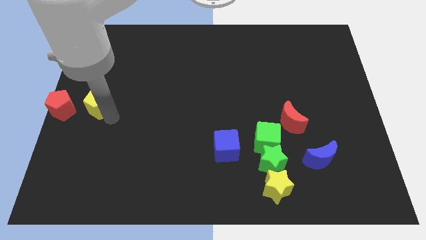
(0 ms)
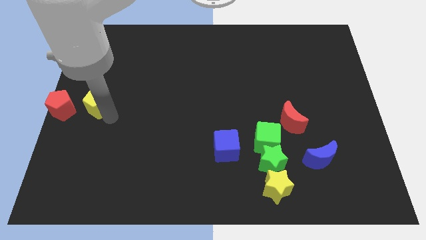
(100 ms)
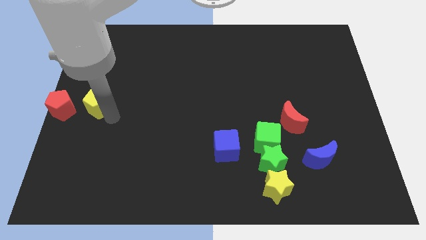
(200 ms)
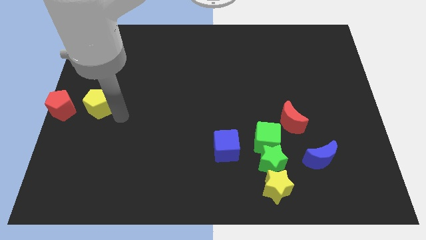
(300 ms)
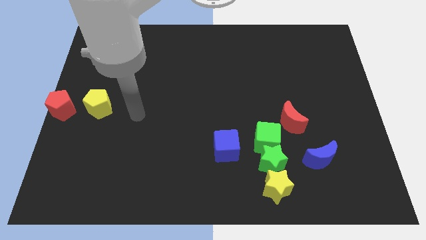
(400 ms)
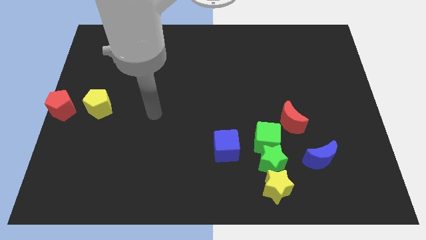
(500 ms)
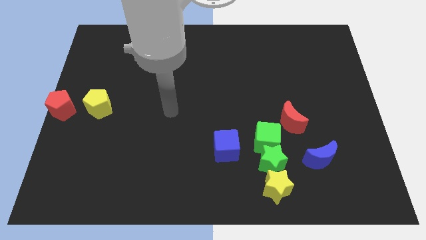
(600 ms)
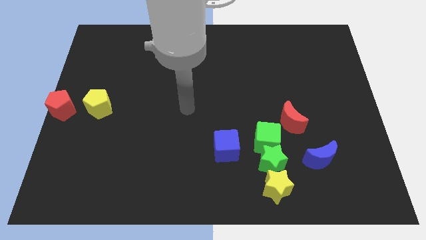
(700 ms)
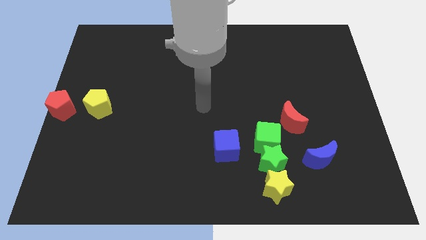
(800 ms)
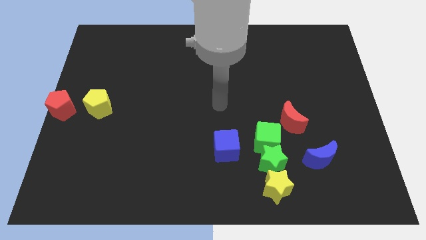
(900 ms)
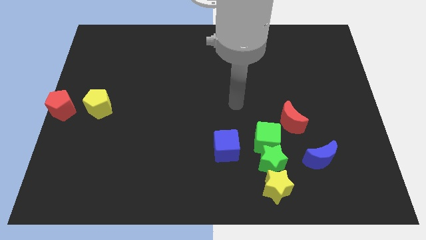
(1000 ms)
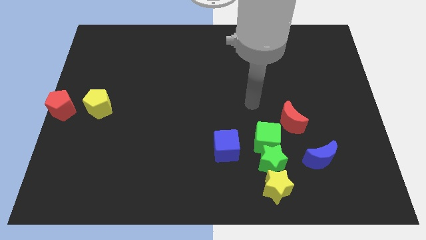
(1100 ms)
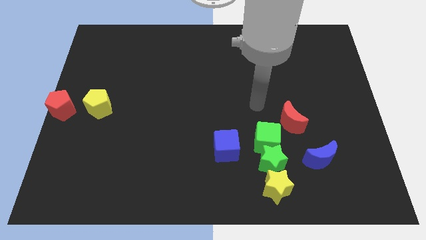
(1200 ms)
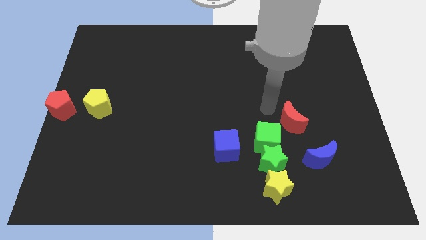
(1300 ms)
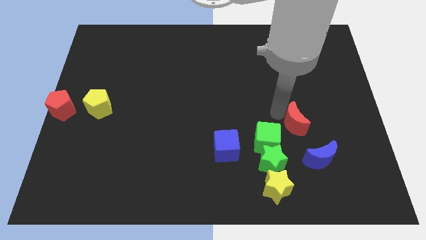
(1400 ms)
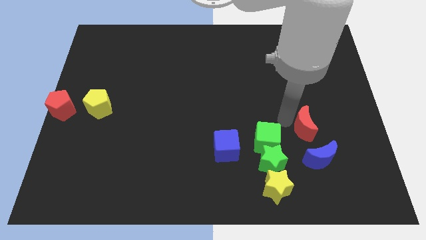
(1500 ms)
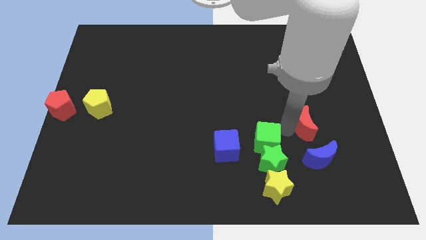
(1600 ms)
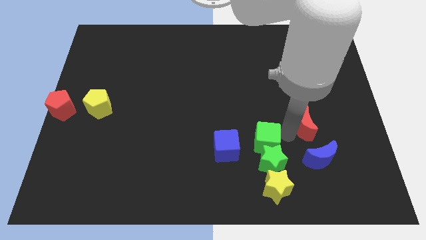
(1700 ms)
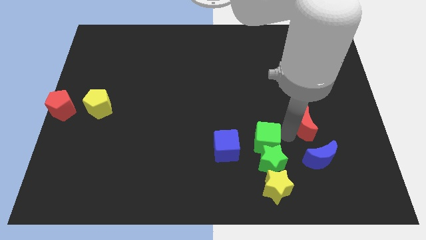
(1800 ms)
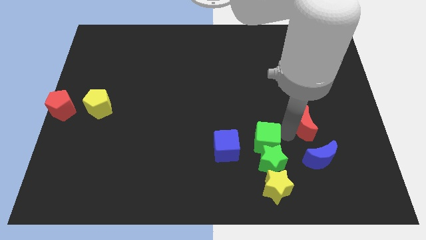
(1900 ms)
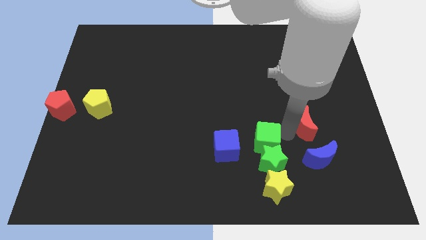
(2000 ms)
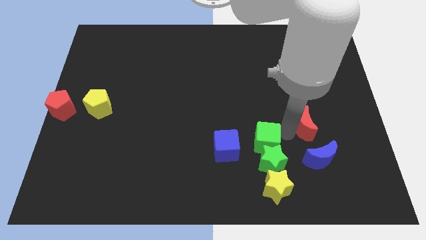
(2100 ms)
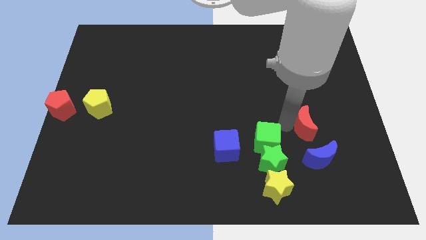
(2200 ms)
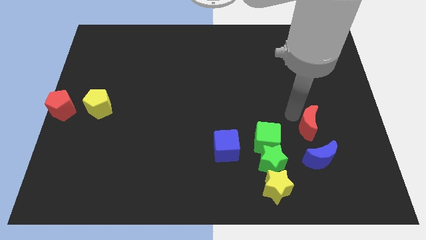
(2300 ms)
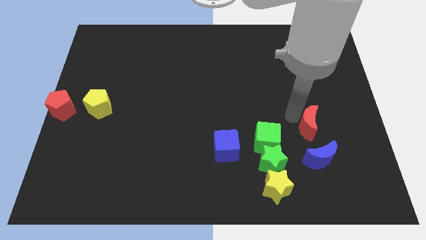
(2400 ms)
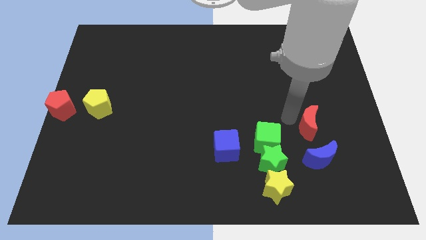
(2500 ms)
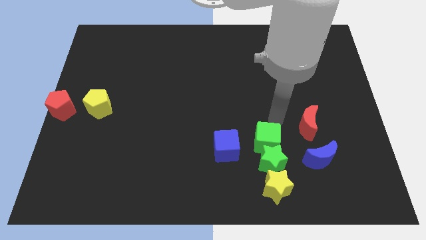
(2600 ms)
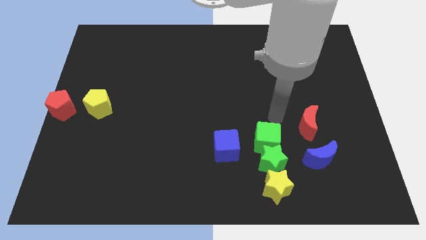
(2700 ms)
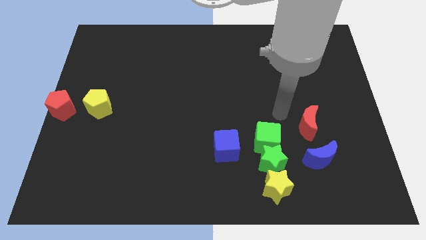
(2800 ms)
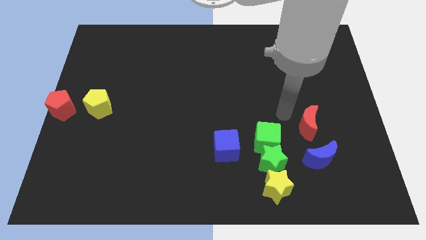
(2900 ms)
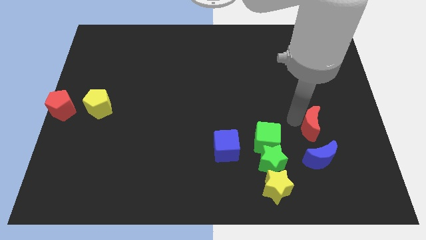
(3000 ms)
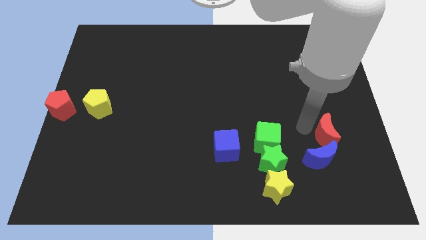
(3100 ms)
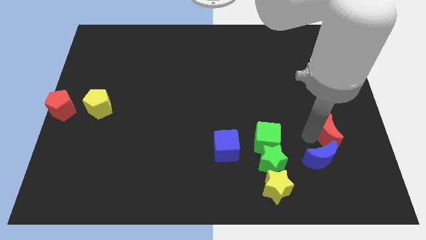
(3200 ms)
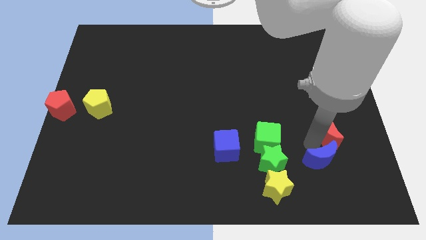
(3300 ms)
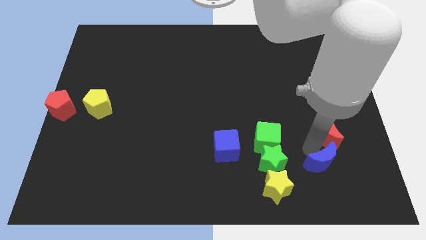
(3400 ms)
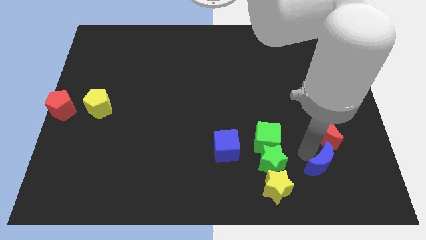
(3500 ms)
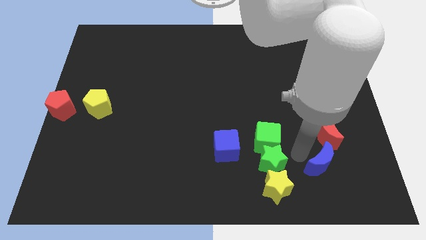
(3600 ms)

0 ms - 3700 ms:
slide the red moon diagonally top right to the blue moon

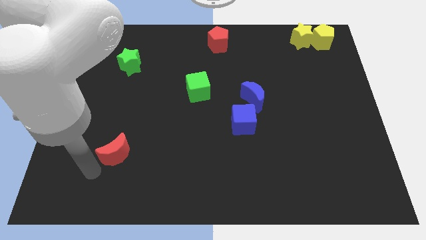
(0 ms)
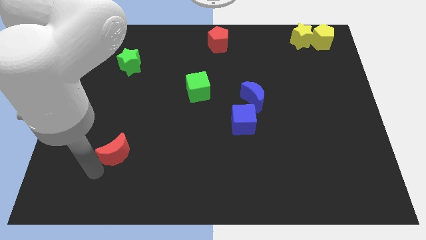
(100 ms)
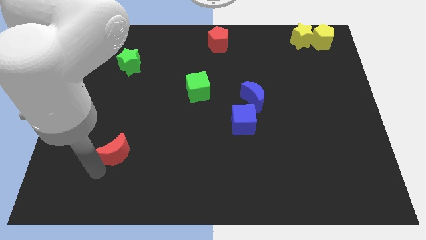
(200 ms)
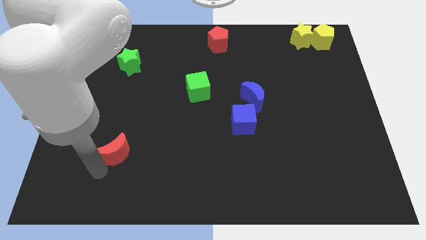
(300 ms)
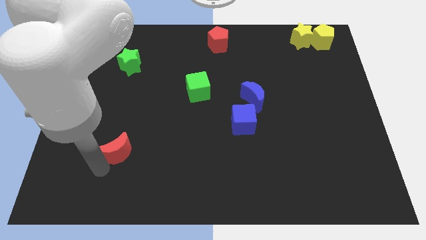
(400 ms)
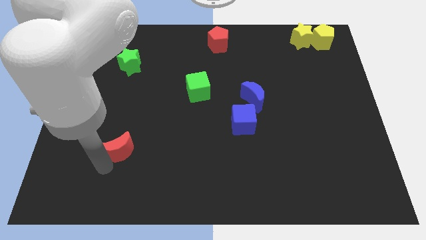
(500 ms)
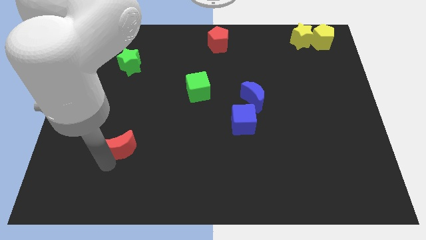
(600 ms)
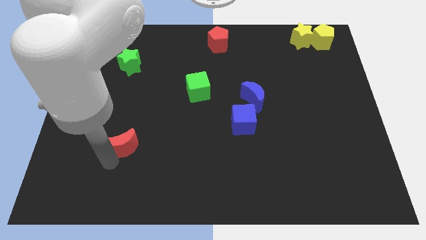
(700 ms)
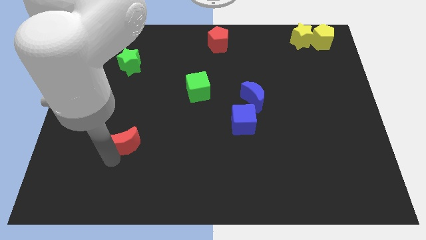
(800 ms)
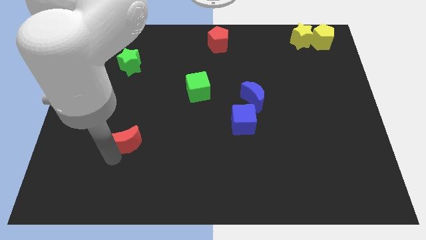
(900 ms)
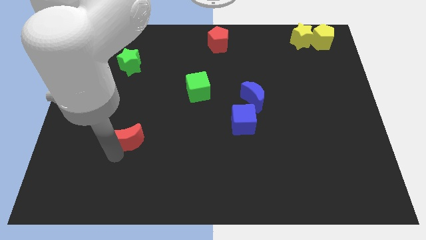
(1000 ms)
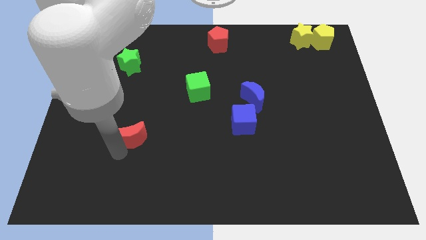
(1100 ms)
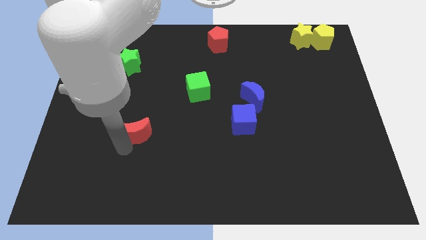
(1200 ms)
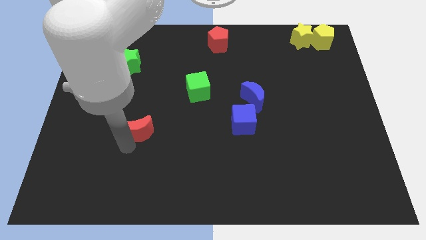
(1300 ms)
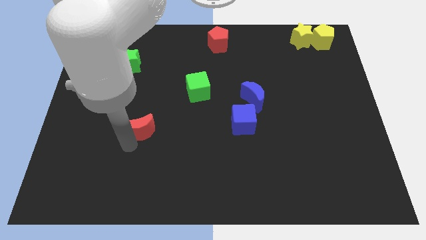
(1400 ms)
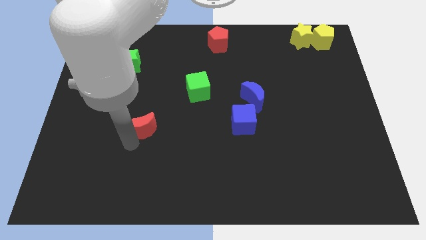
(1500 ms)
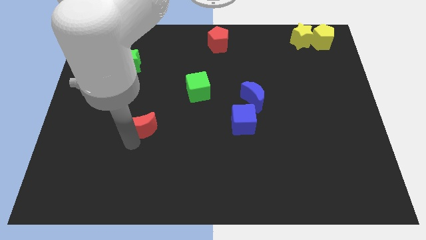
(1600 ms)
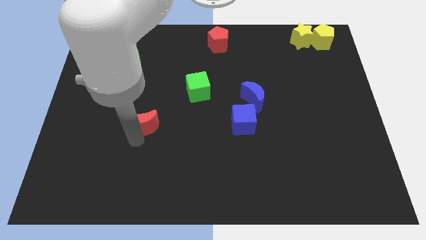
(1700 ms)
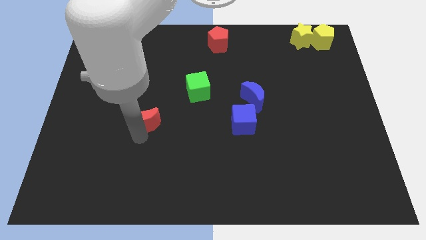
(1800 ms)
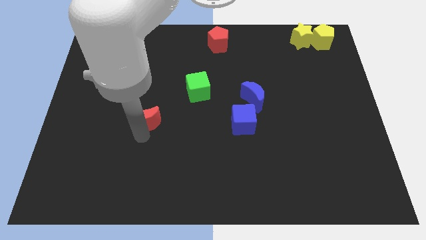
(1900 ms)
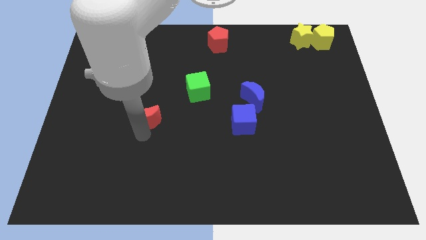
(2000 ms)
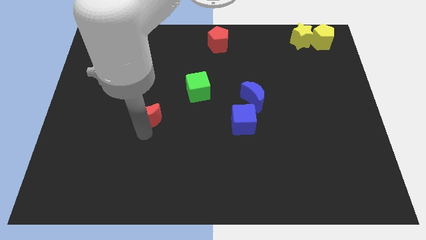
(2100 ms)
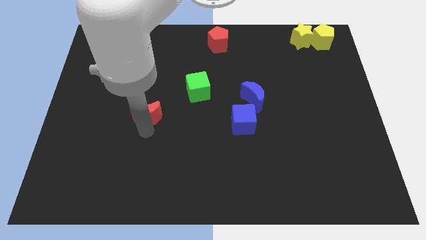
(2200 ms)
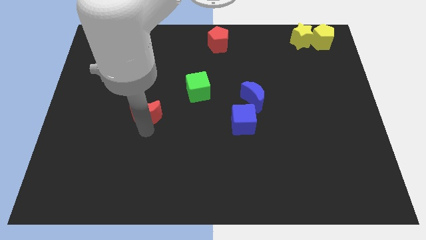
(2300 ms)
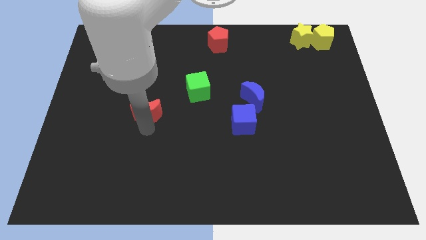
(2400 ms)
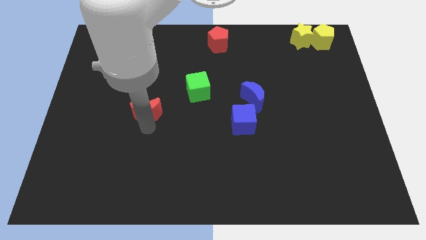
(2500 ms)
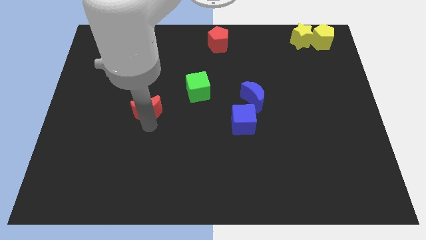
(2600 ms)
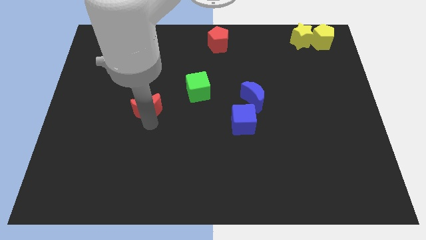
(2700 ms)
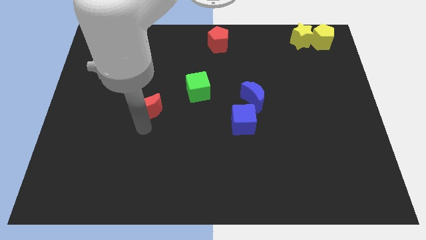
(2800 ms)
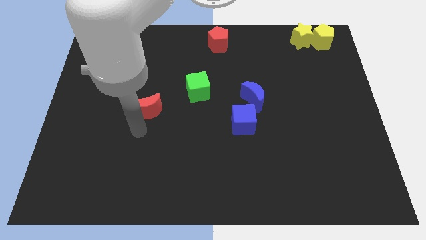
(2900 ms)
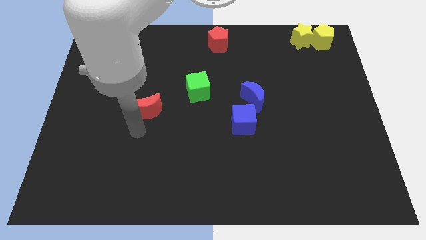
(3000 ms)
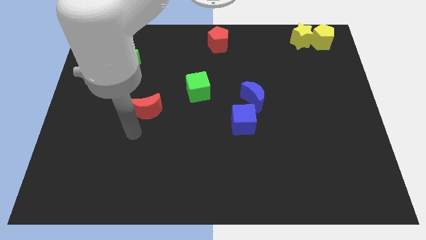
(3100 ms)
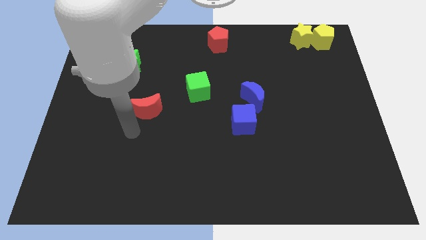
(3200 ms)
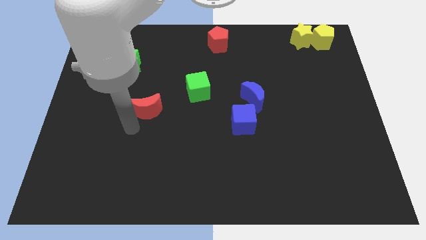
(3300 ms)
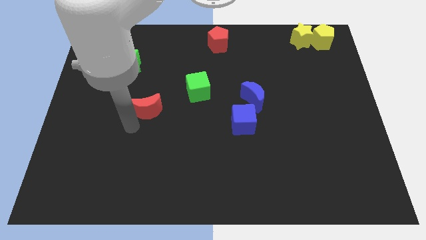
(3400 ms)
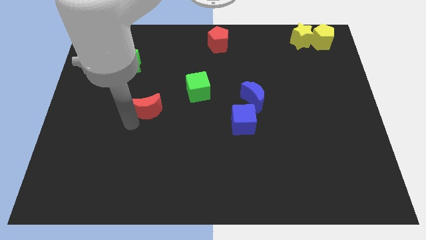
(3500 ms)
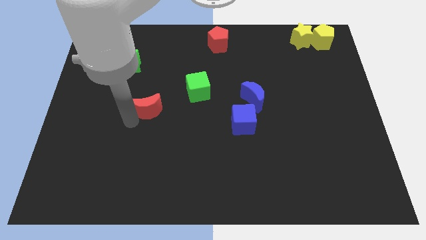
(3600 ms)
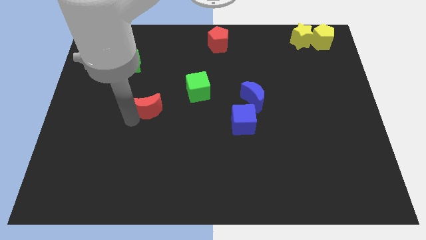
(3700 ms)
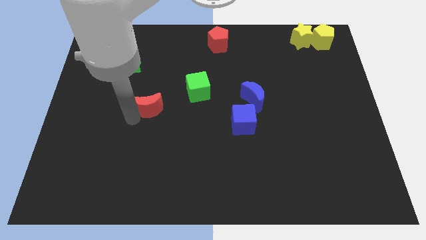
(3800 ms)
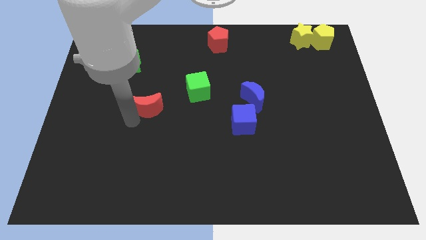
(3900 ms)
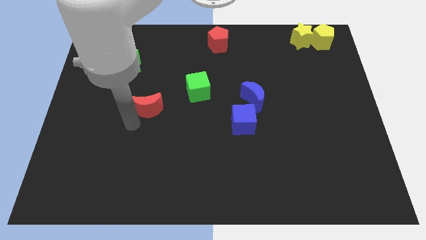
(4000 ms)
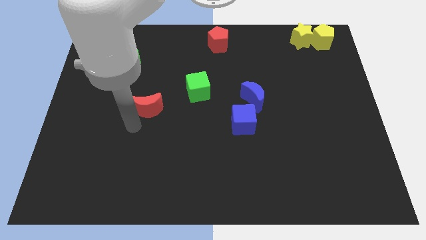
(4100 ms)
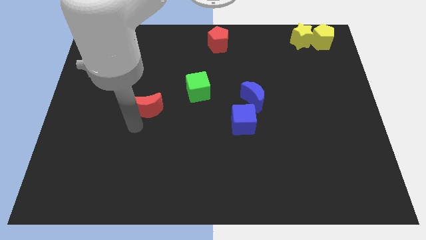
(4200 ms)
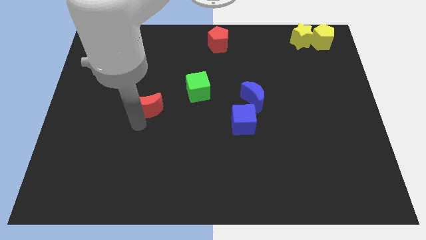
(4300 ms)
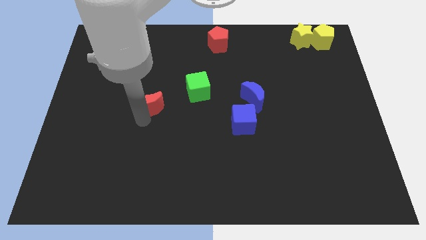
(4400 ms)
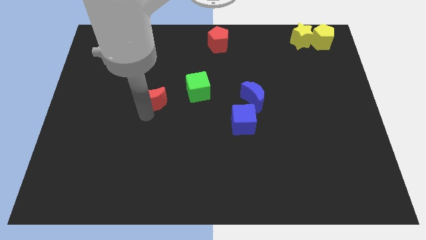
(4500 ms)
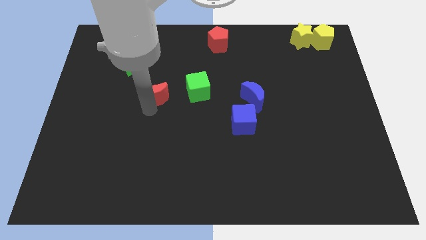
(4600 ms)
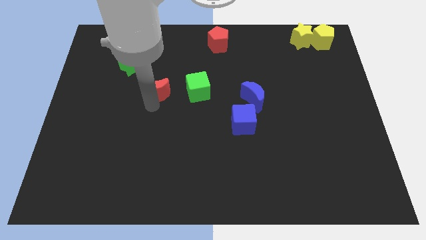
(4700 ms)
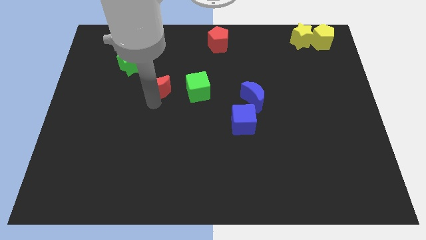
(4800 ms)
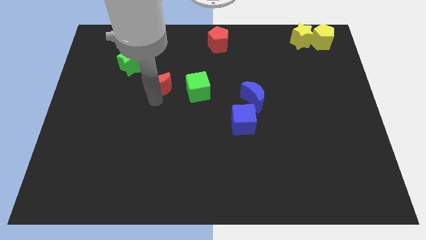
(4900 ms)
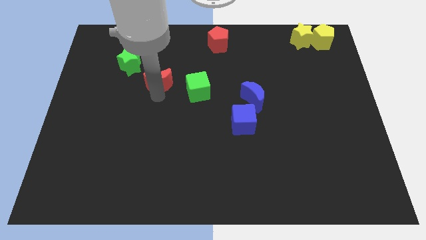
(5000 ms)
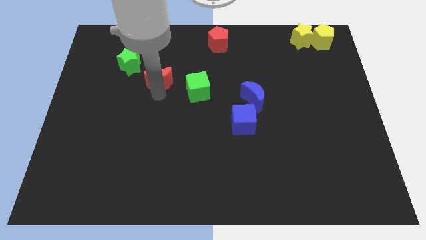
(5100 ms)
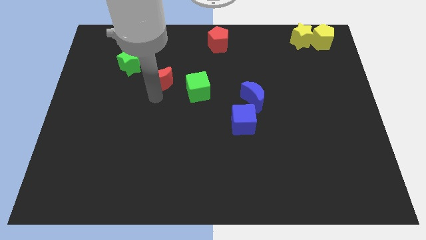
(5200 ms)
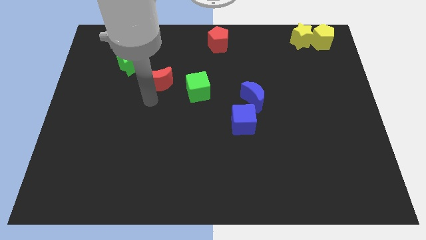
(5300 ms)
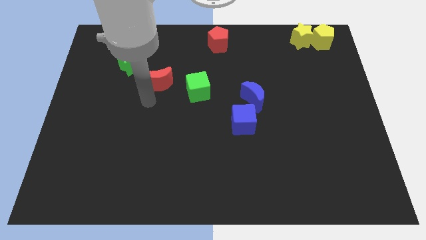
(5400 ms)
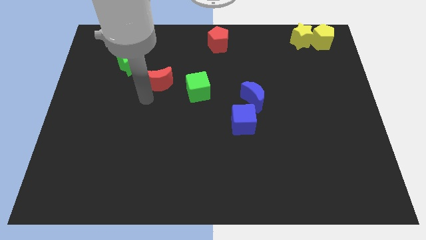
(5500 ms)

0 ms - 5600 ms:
place the red moon at the bottom right side of the green star
